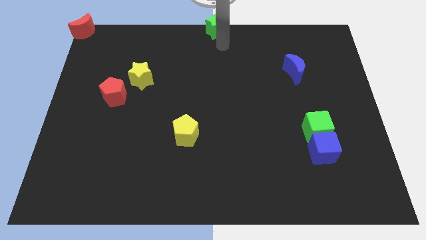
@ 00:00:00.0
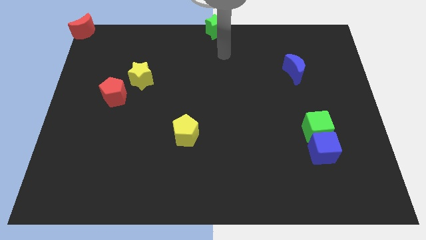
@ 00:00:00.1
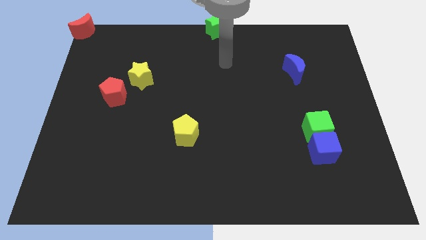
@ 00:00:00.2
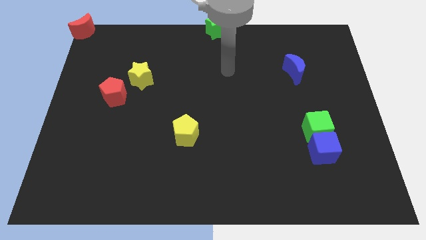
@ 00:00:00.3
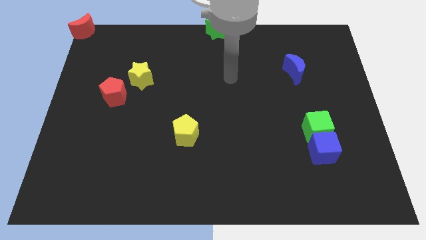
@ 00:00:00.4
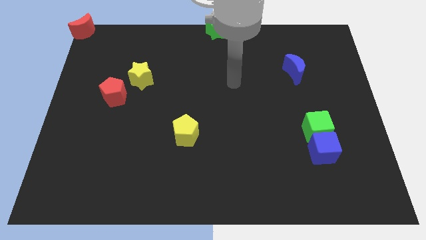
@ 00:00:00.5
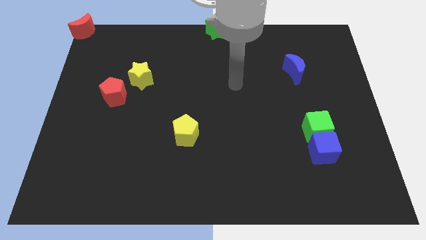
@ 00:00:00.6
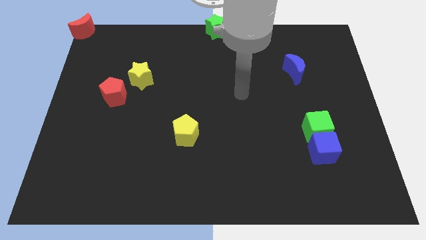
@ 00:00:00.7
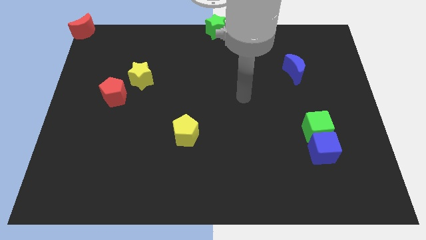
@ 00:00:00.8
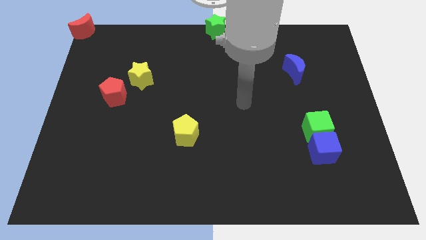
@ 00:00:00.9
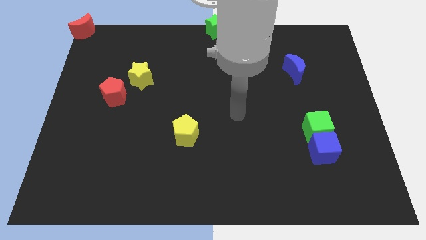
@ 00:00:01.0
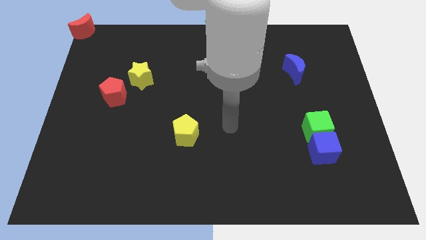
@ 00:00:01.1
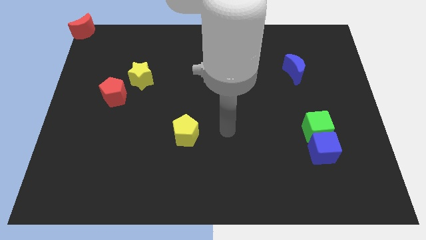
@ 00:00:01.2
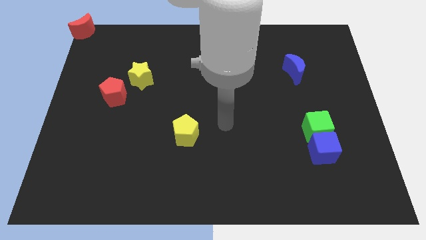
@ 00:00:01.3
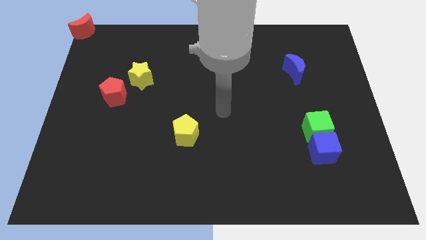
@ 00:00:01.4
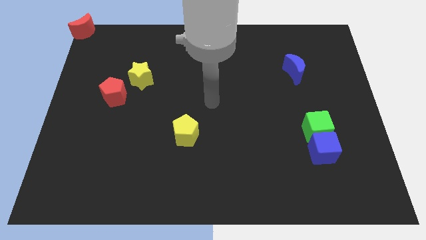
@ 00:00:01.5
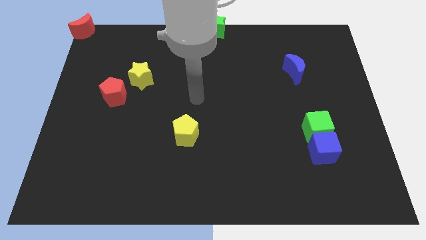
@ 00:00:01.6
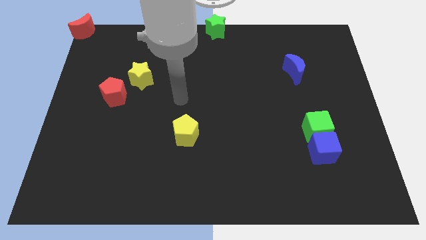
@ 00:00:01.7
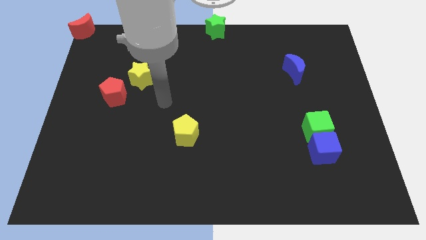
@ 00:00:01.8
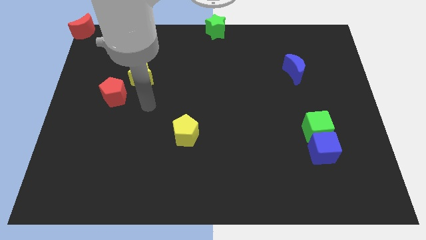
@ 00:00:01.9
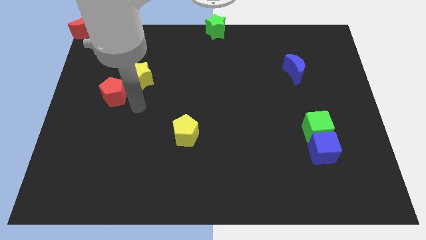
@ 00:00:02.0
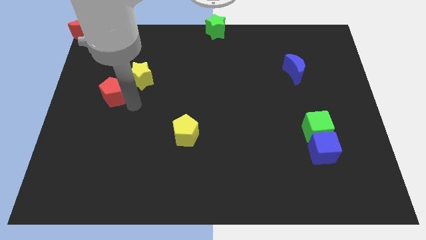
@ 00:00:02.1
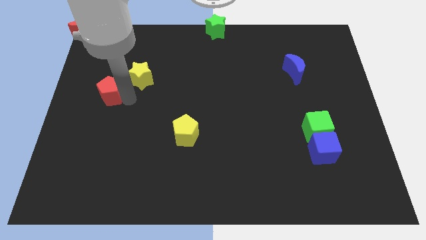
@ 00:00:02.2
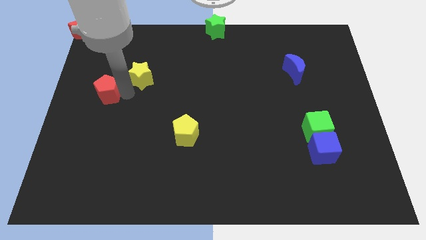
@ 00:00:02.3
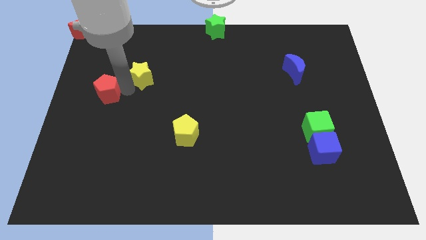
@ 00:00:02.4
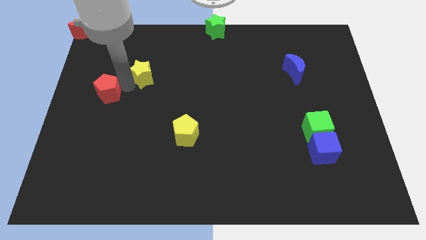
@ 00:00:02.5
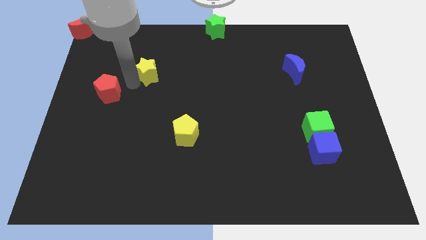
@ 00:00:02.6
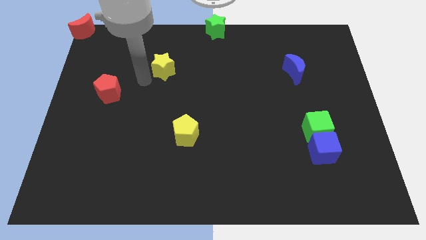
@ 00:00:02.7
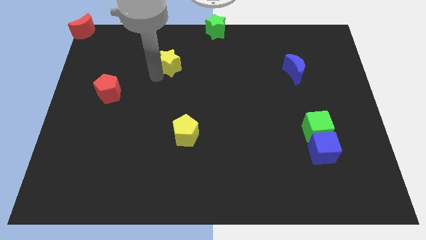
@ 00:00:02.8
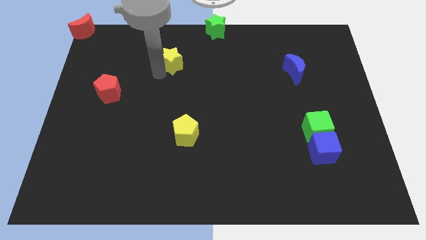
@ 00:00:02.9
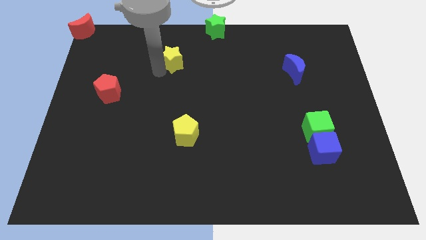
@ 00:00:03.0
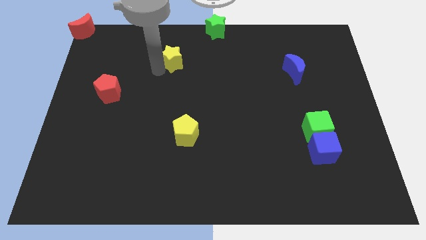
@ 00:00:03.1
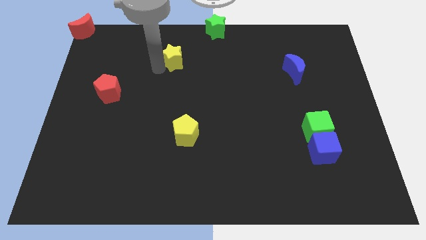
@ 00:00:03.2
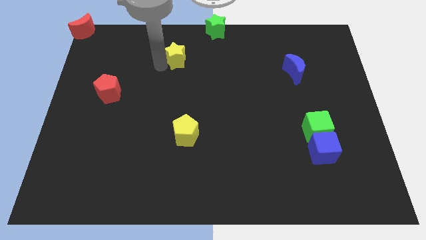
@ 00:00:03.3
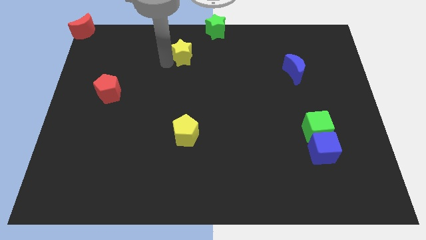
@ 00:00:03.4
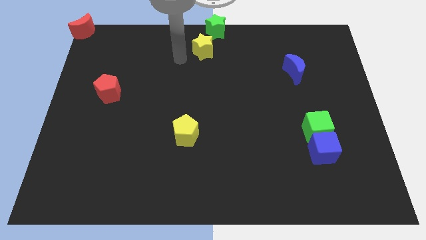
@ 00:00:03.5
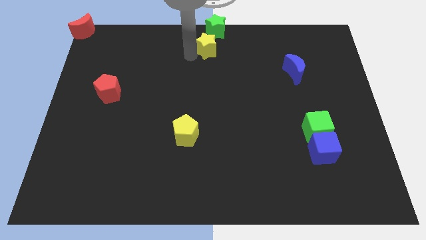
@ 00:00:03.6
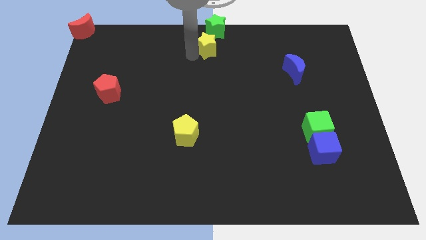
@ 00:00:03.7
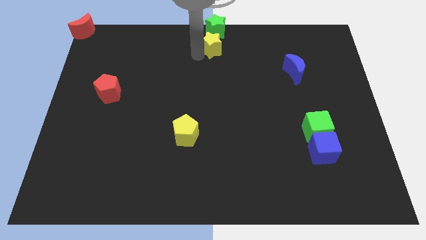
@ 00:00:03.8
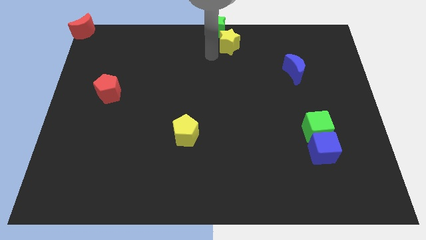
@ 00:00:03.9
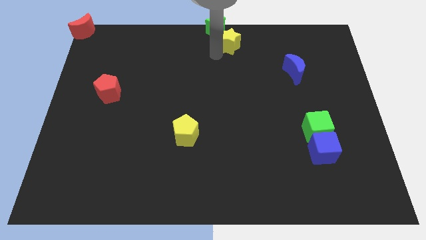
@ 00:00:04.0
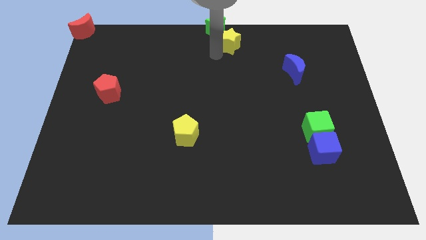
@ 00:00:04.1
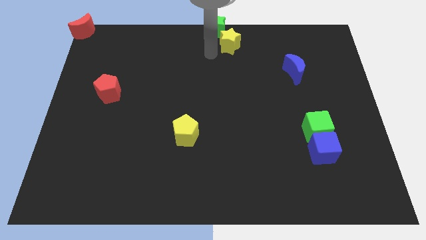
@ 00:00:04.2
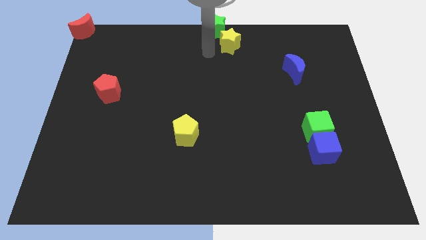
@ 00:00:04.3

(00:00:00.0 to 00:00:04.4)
push the yellow star into the bottom right of the green star

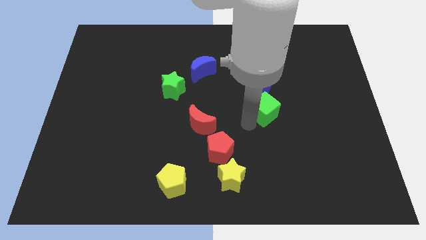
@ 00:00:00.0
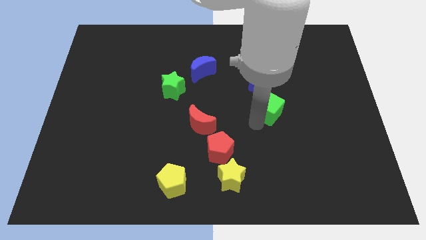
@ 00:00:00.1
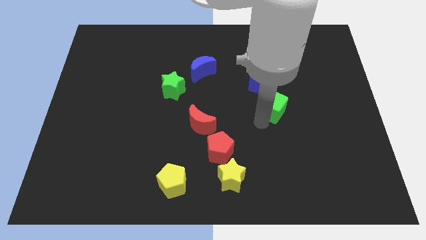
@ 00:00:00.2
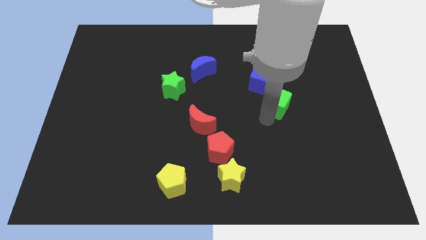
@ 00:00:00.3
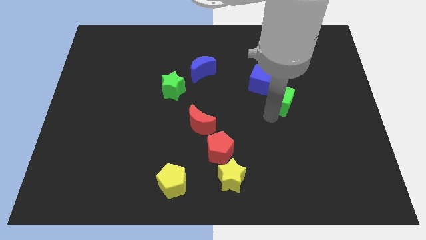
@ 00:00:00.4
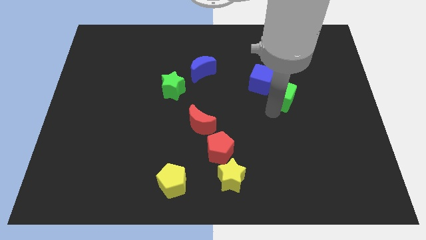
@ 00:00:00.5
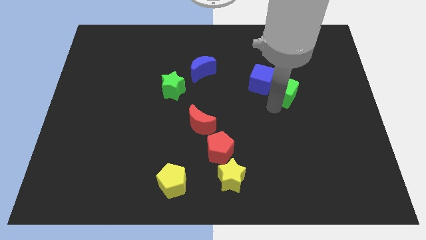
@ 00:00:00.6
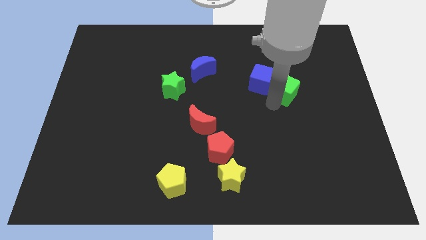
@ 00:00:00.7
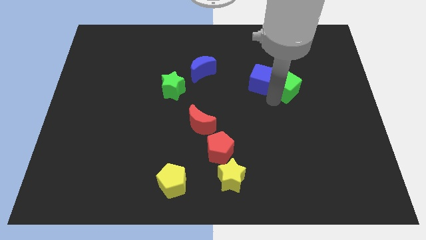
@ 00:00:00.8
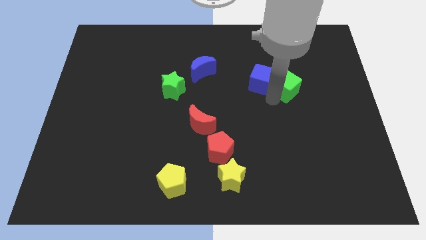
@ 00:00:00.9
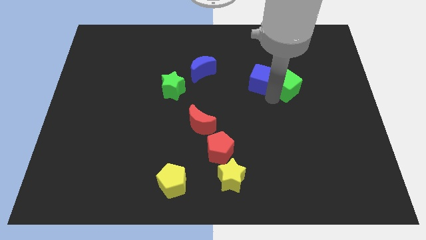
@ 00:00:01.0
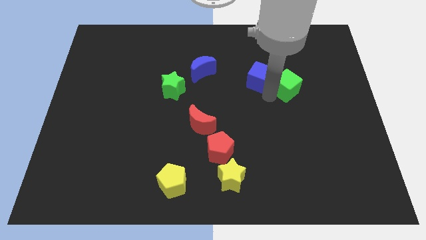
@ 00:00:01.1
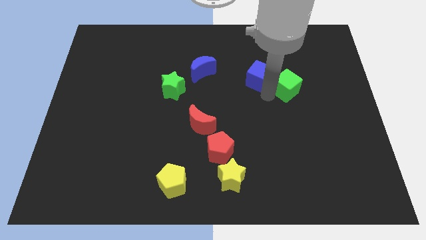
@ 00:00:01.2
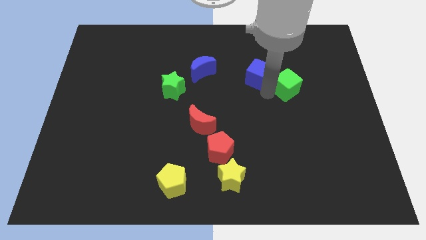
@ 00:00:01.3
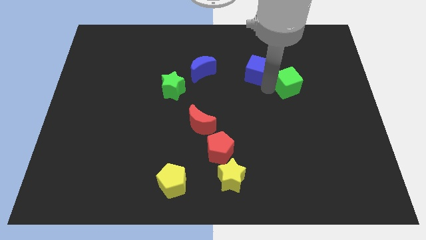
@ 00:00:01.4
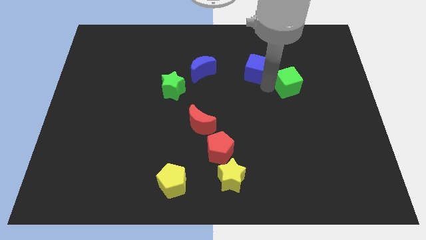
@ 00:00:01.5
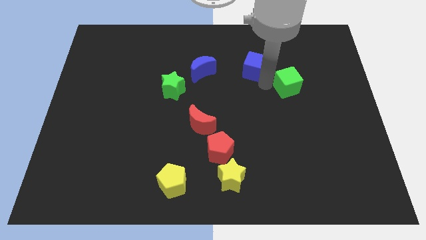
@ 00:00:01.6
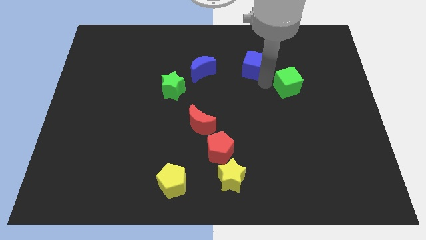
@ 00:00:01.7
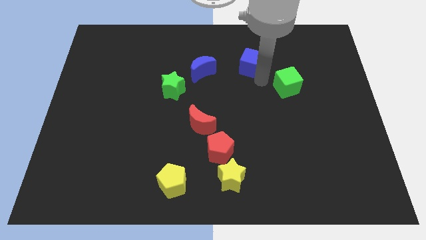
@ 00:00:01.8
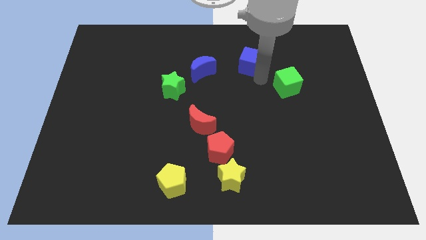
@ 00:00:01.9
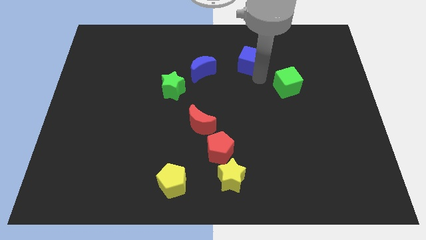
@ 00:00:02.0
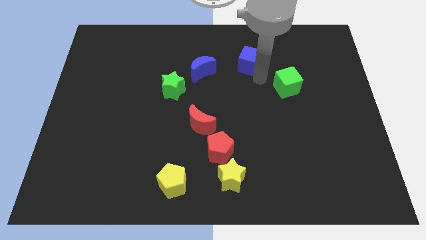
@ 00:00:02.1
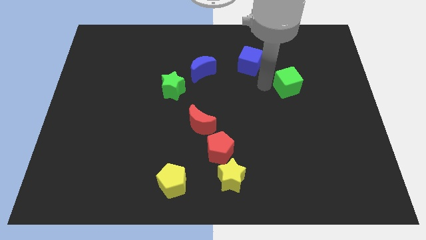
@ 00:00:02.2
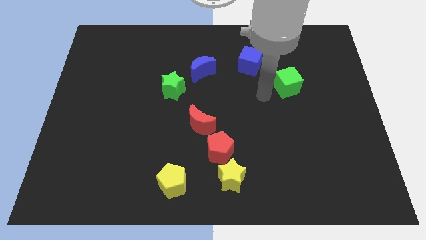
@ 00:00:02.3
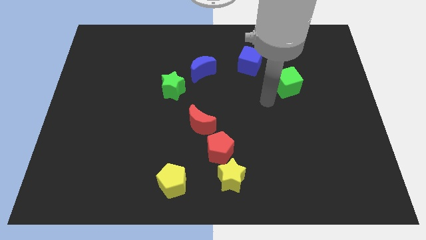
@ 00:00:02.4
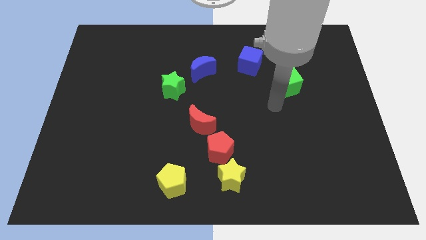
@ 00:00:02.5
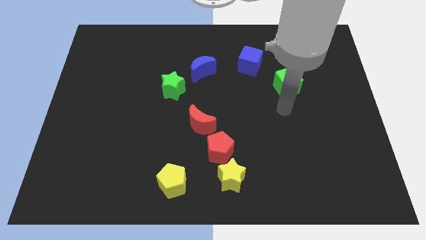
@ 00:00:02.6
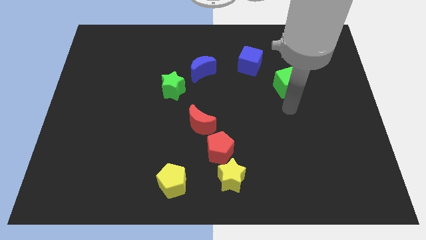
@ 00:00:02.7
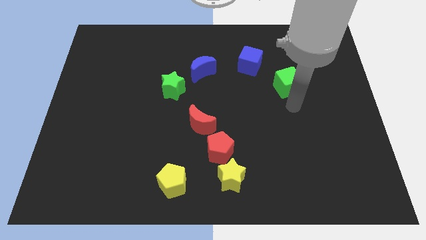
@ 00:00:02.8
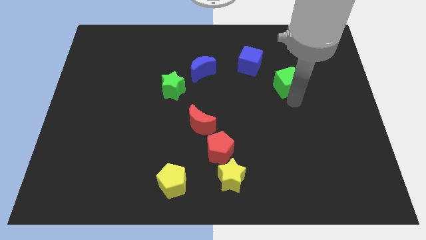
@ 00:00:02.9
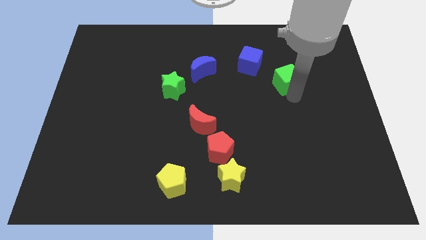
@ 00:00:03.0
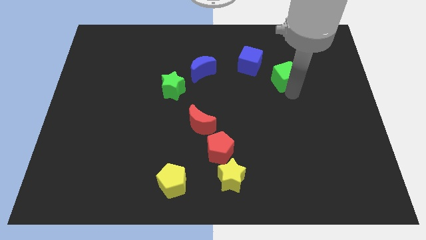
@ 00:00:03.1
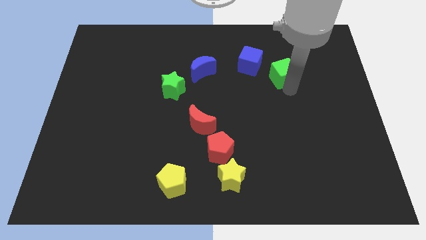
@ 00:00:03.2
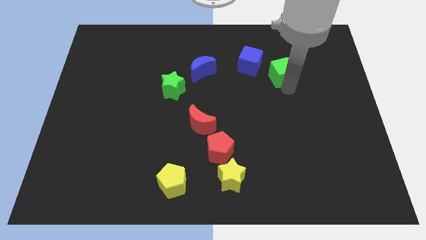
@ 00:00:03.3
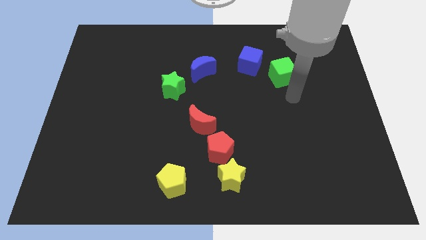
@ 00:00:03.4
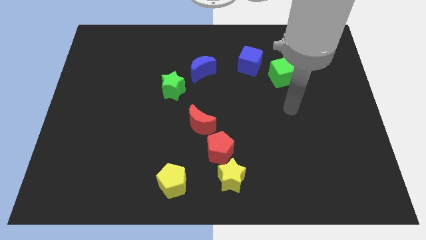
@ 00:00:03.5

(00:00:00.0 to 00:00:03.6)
place the blue cube and green cube to the right of blue crescent

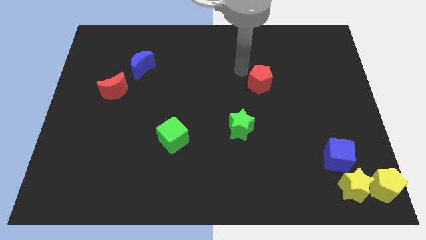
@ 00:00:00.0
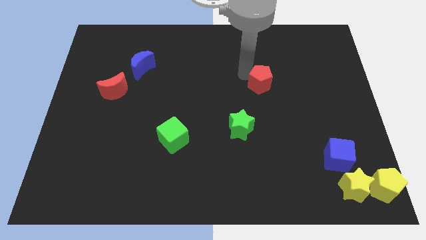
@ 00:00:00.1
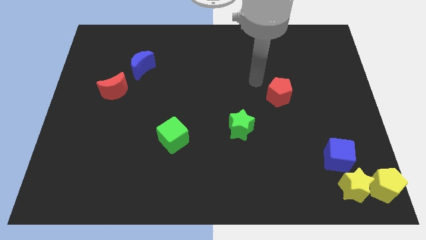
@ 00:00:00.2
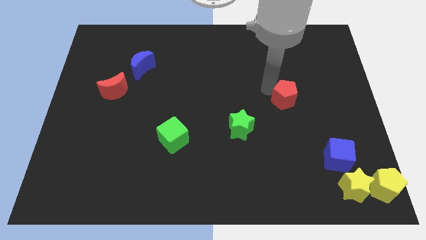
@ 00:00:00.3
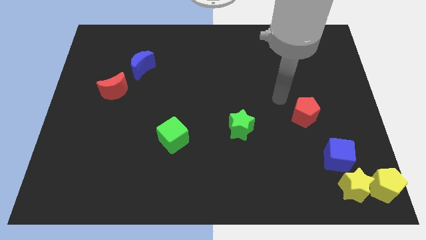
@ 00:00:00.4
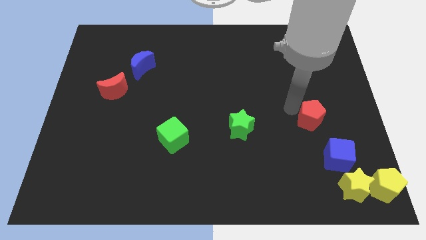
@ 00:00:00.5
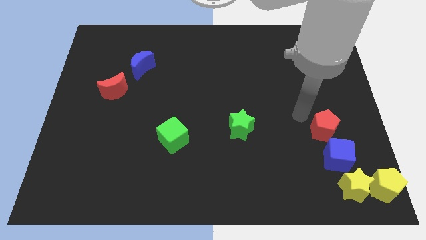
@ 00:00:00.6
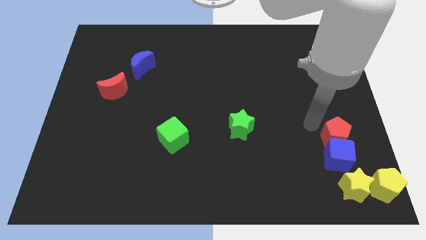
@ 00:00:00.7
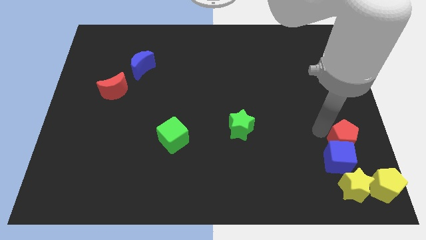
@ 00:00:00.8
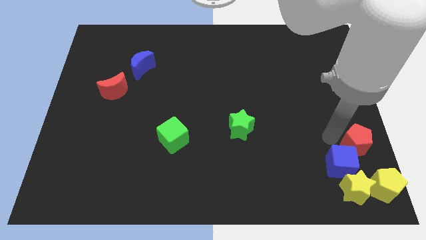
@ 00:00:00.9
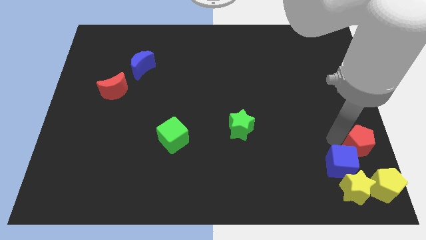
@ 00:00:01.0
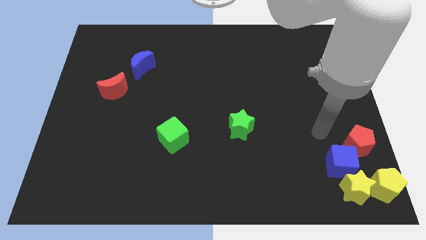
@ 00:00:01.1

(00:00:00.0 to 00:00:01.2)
move the red pentagon to the bottom right of the board
